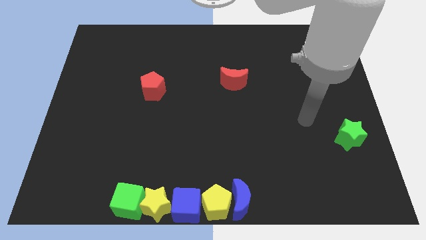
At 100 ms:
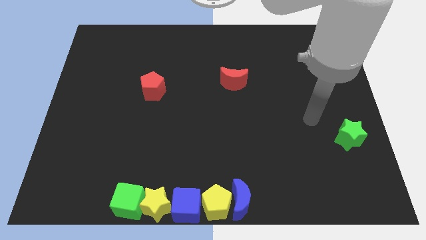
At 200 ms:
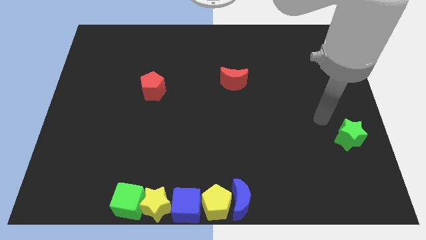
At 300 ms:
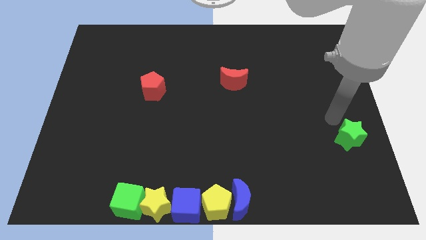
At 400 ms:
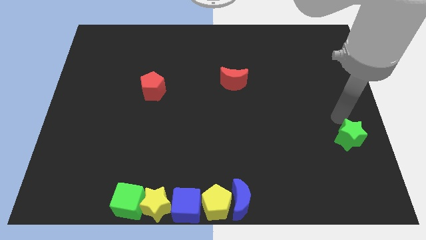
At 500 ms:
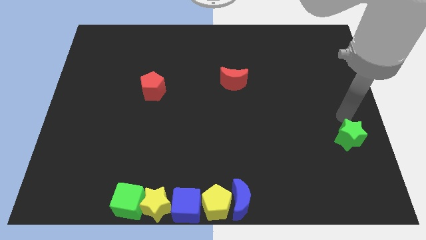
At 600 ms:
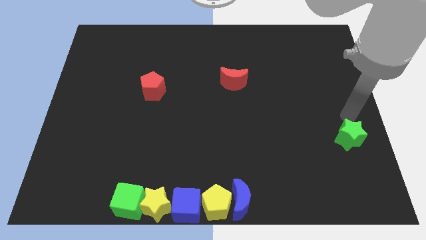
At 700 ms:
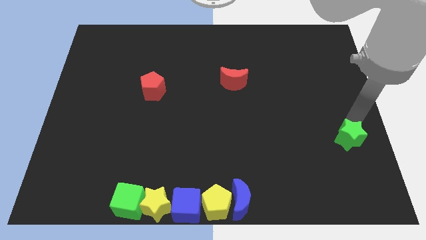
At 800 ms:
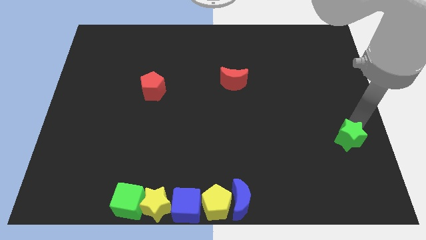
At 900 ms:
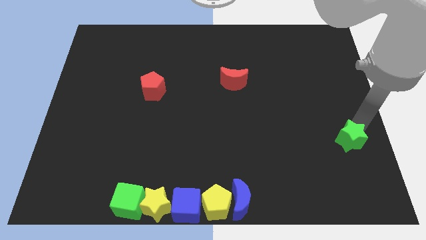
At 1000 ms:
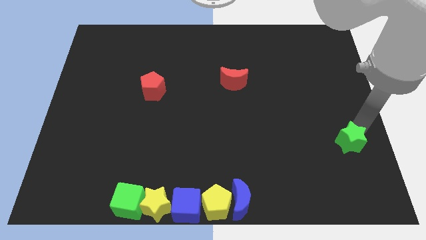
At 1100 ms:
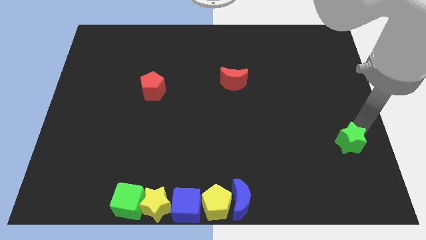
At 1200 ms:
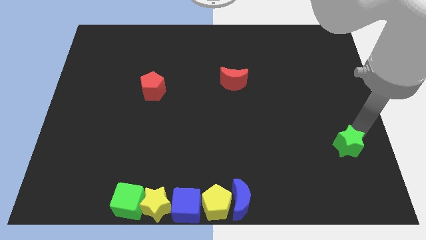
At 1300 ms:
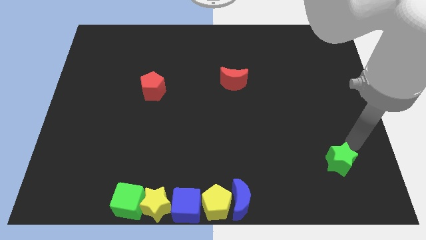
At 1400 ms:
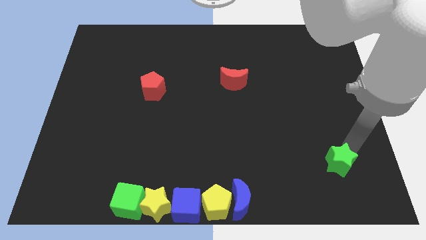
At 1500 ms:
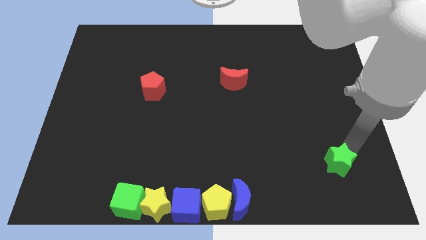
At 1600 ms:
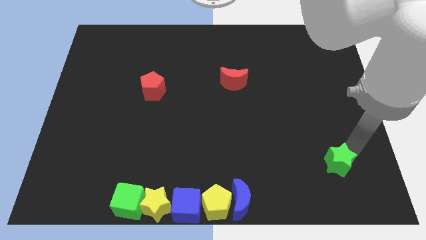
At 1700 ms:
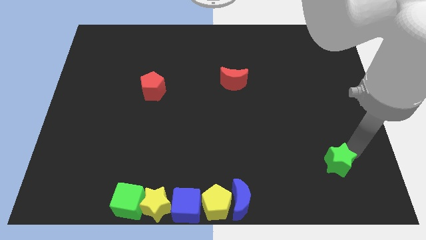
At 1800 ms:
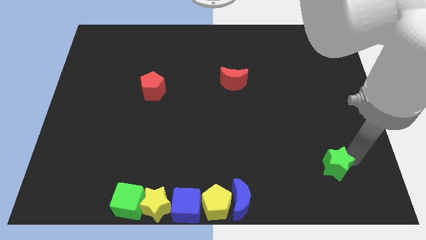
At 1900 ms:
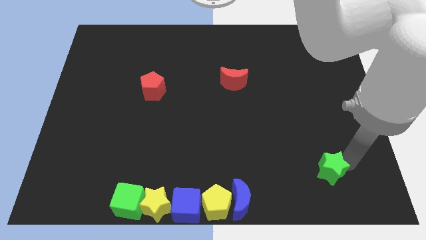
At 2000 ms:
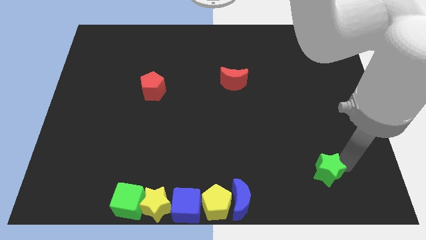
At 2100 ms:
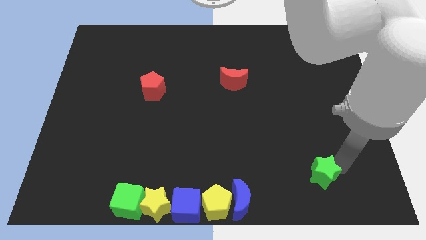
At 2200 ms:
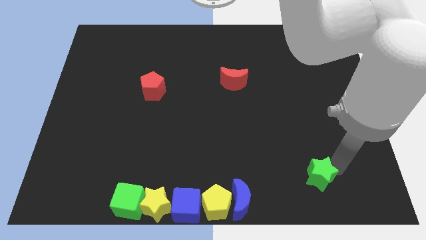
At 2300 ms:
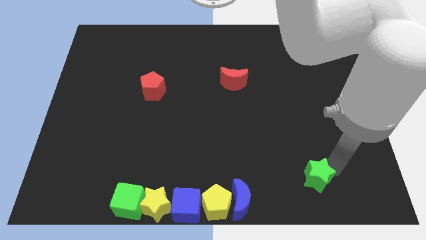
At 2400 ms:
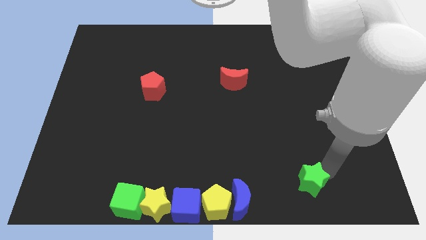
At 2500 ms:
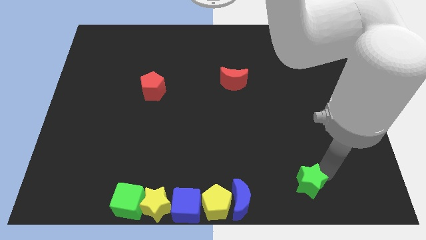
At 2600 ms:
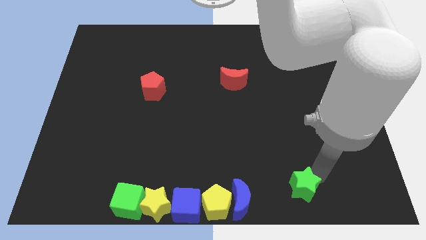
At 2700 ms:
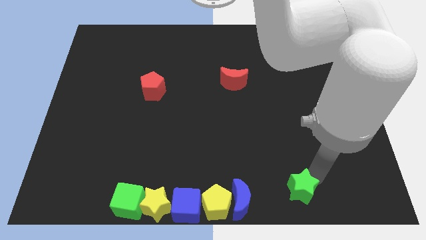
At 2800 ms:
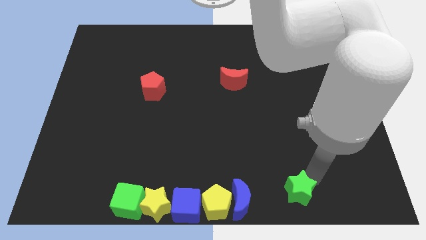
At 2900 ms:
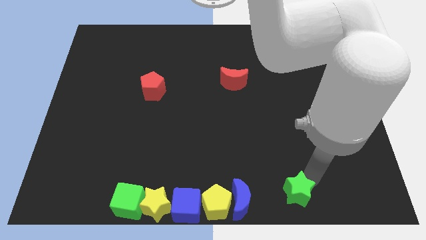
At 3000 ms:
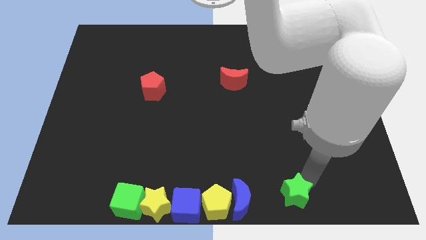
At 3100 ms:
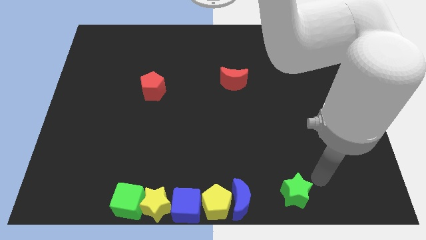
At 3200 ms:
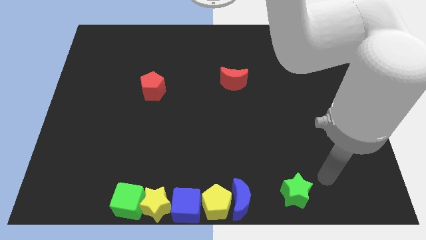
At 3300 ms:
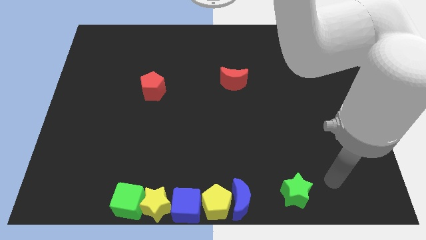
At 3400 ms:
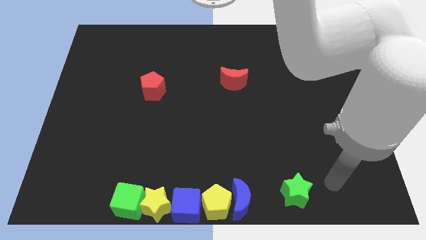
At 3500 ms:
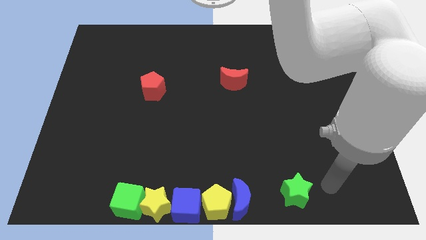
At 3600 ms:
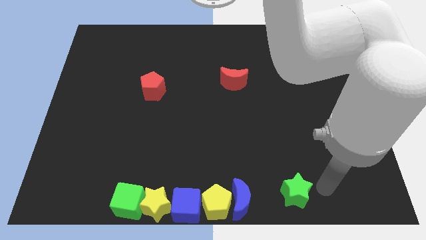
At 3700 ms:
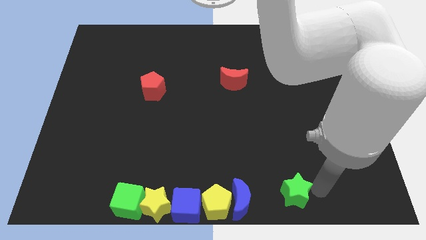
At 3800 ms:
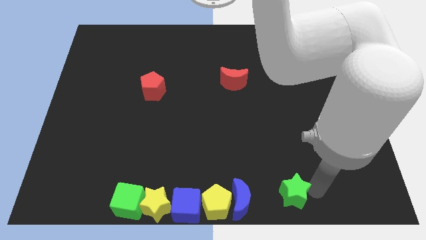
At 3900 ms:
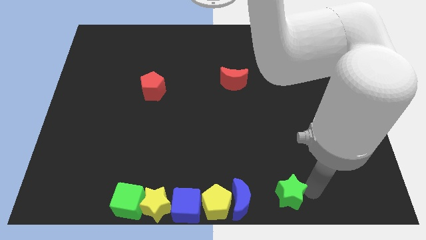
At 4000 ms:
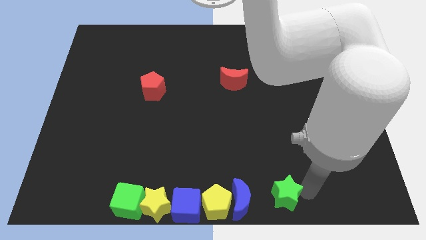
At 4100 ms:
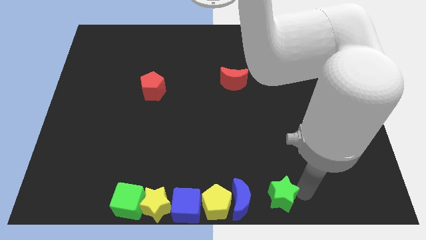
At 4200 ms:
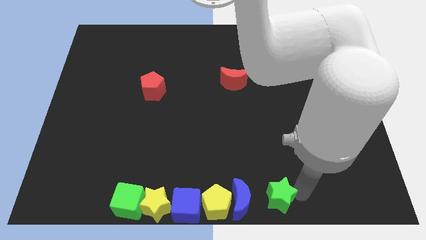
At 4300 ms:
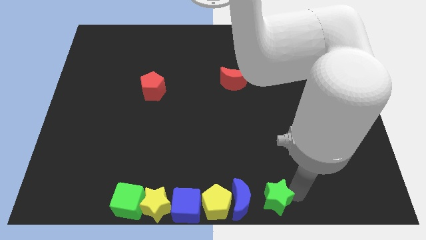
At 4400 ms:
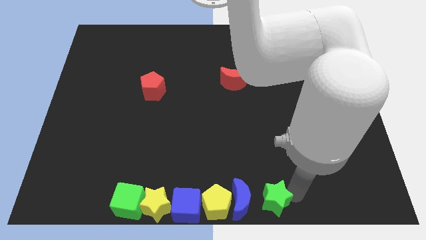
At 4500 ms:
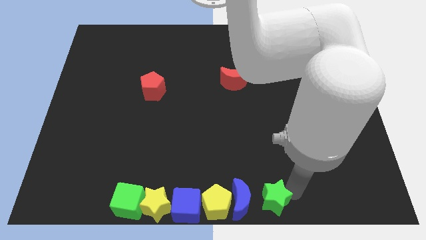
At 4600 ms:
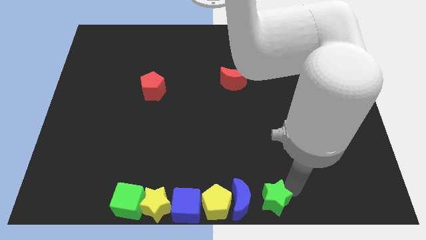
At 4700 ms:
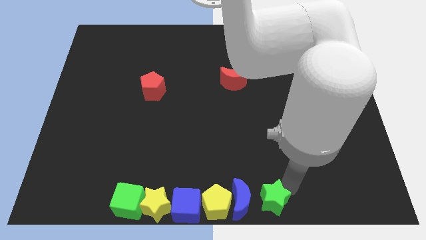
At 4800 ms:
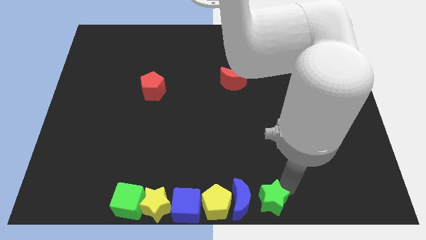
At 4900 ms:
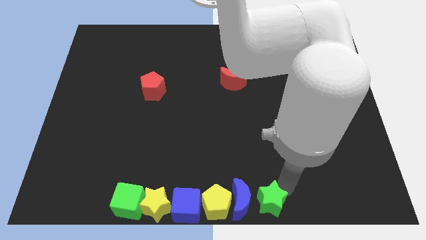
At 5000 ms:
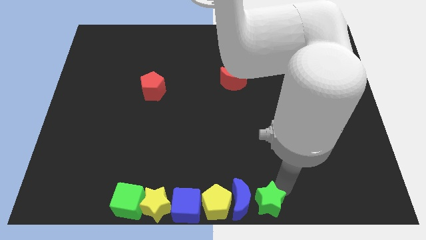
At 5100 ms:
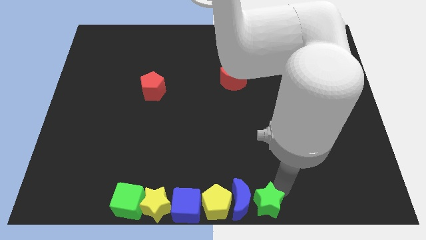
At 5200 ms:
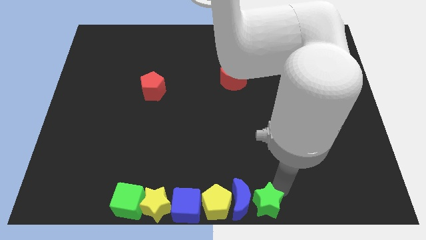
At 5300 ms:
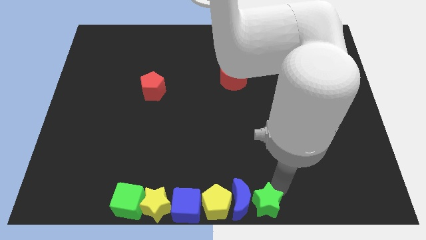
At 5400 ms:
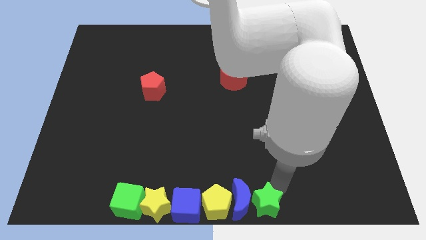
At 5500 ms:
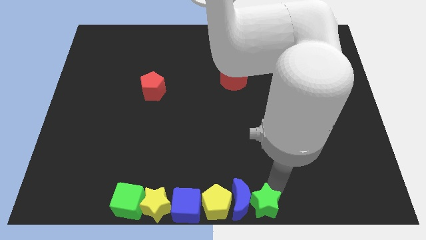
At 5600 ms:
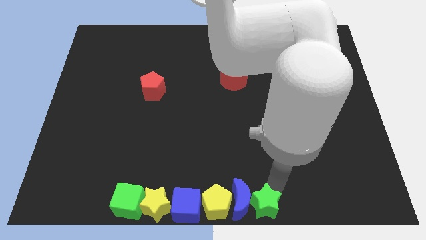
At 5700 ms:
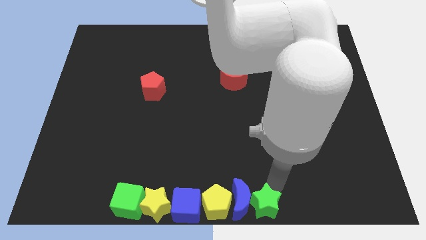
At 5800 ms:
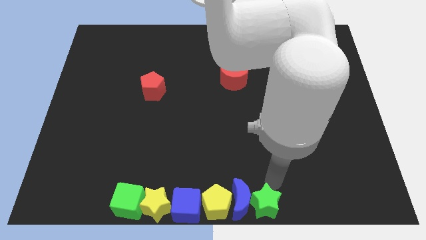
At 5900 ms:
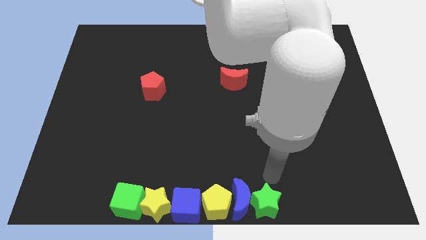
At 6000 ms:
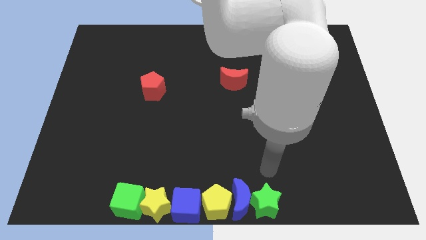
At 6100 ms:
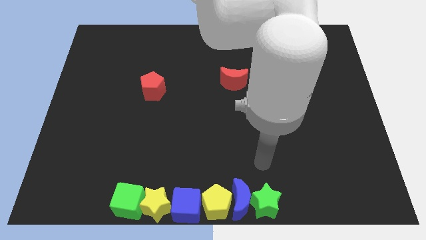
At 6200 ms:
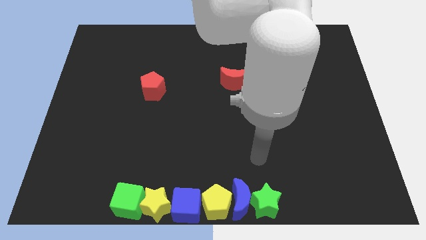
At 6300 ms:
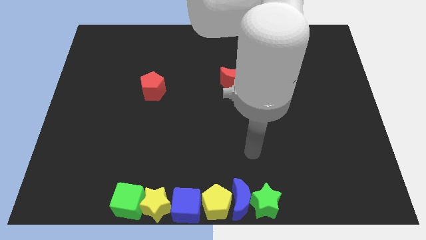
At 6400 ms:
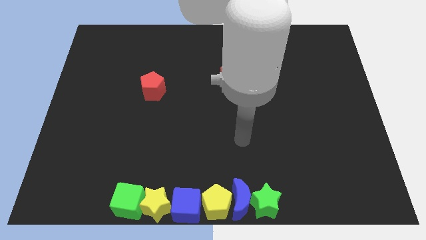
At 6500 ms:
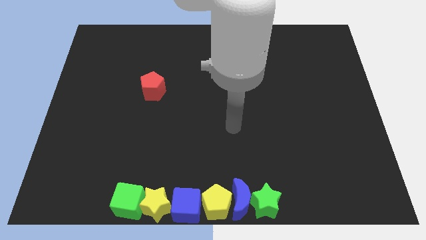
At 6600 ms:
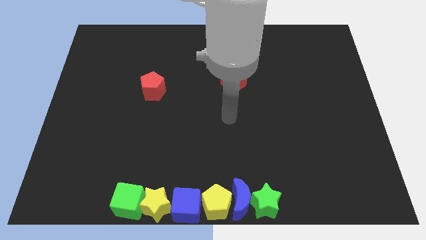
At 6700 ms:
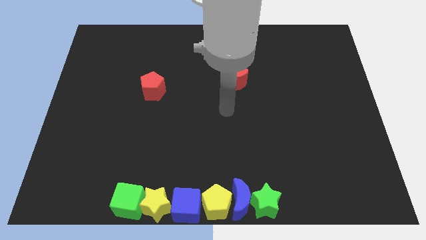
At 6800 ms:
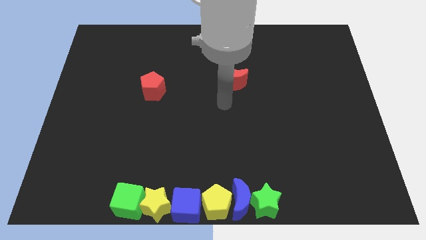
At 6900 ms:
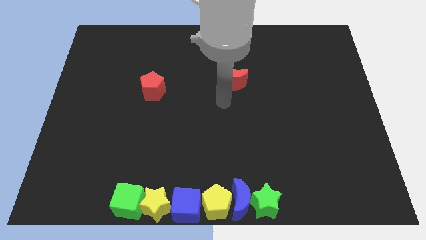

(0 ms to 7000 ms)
move the green star right beside the blue crescent

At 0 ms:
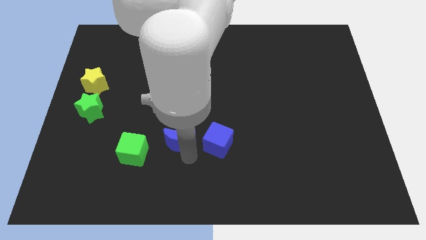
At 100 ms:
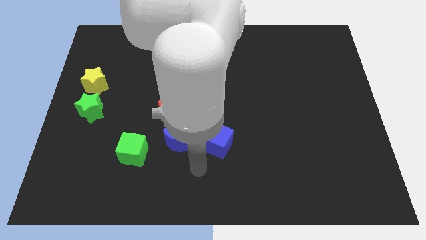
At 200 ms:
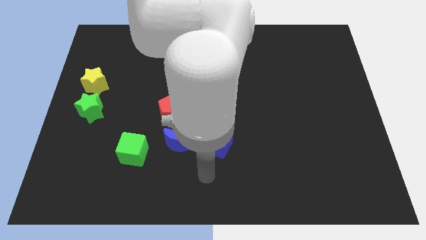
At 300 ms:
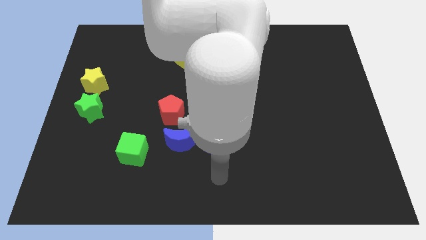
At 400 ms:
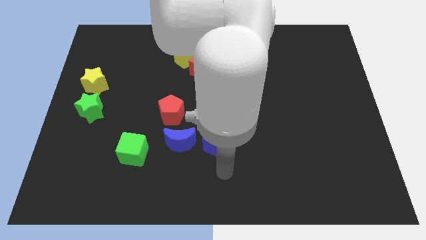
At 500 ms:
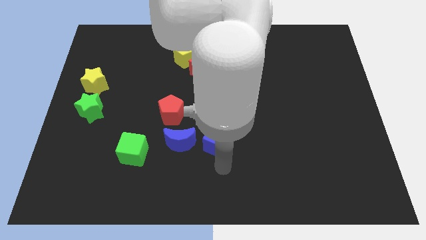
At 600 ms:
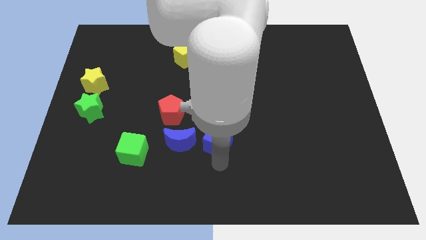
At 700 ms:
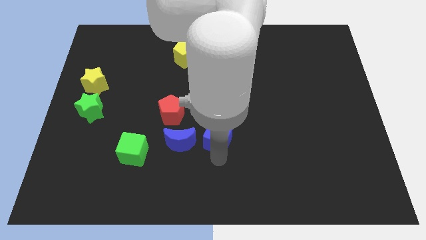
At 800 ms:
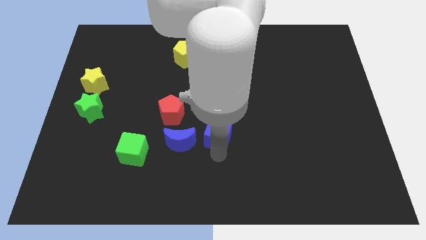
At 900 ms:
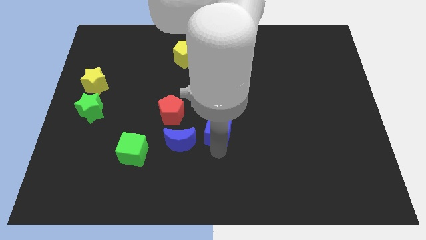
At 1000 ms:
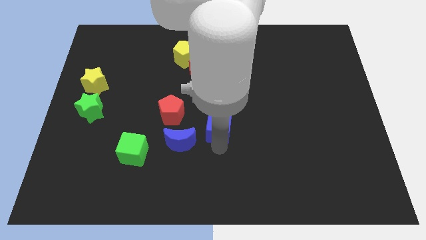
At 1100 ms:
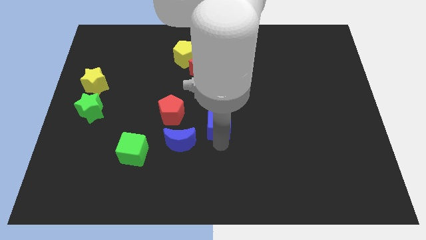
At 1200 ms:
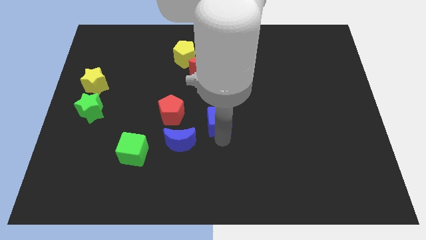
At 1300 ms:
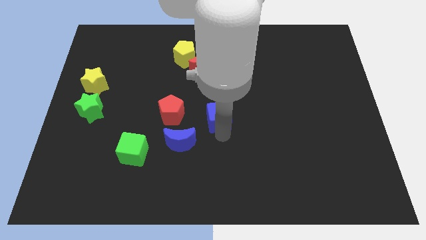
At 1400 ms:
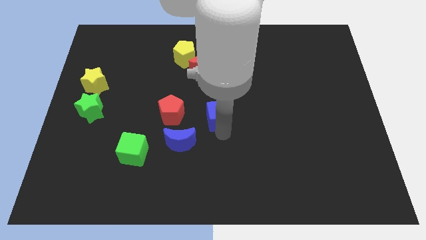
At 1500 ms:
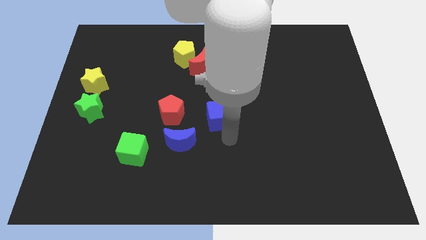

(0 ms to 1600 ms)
push the blue cube to the center of the board

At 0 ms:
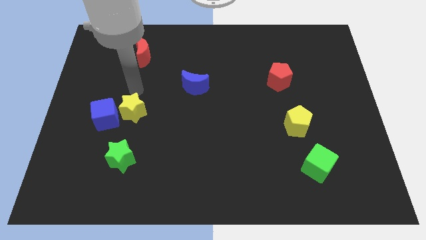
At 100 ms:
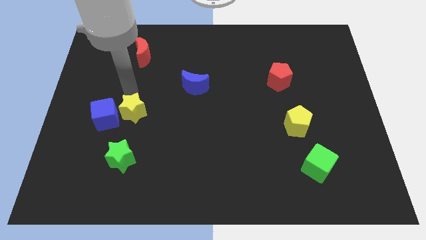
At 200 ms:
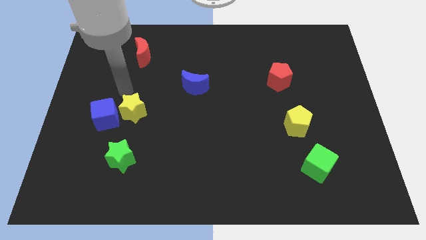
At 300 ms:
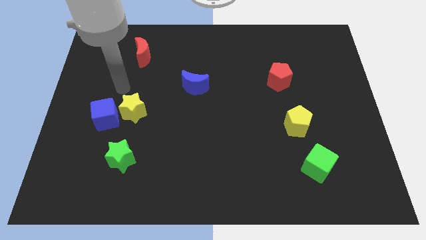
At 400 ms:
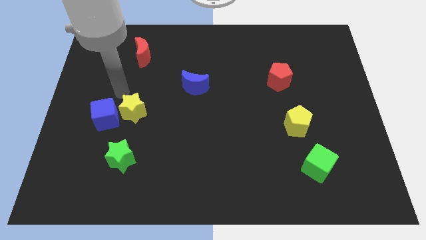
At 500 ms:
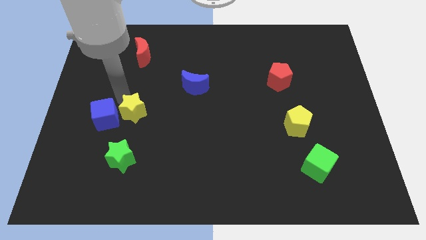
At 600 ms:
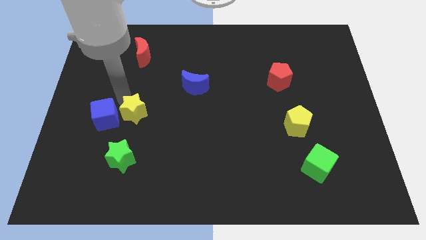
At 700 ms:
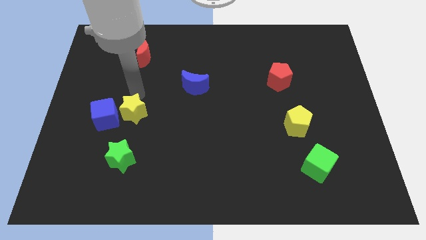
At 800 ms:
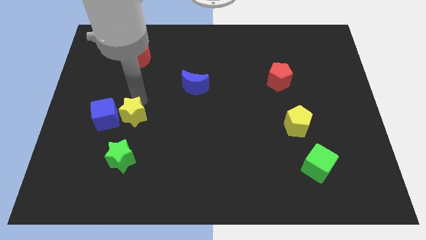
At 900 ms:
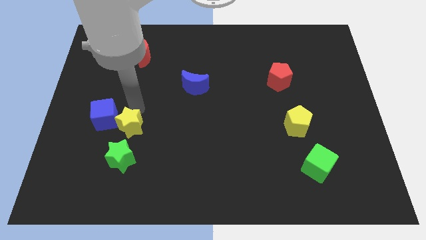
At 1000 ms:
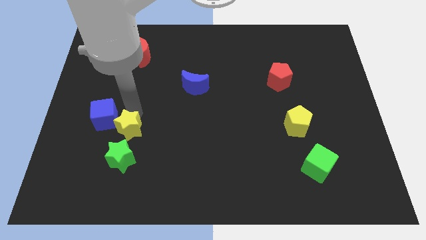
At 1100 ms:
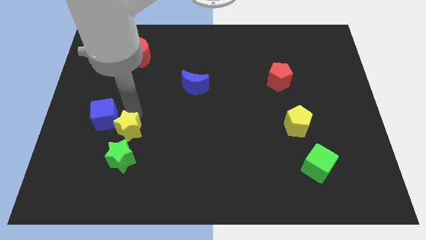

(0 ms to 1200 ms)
push the yellow star to the top of the green star
